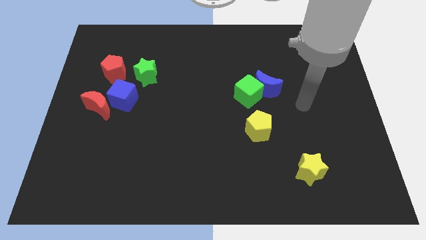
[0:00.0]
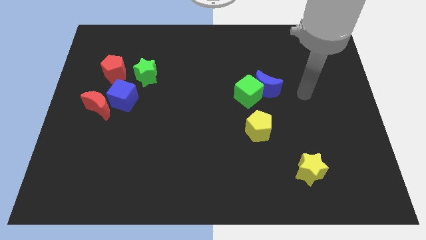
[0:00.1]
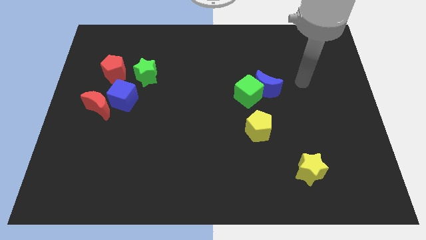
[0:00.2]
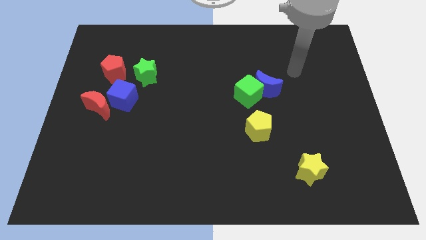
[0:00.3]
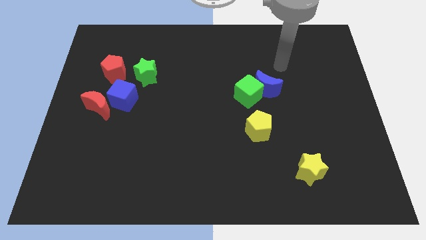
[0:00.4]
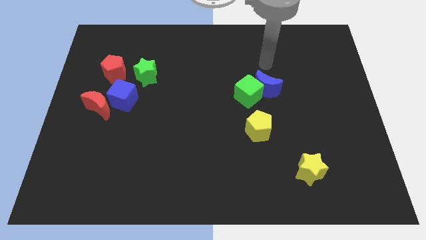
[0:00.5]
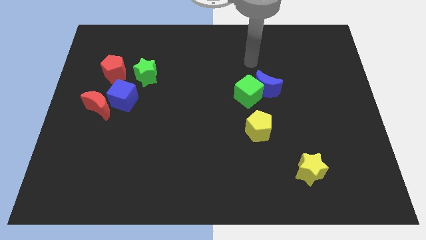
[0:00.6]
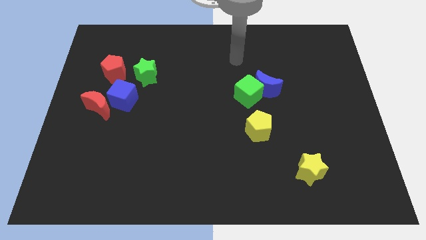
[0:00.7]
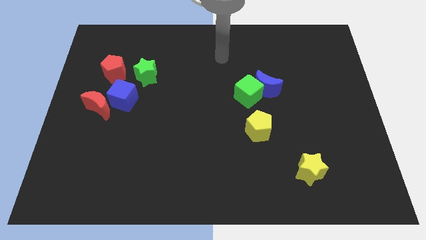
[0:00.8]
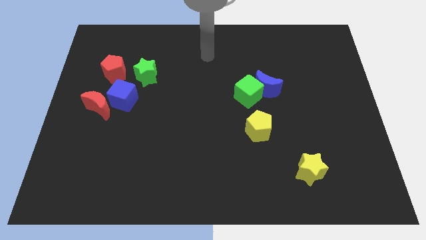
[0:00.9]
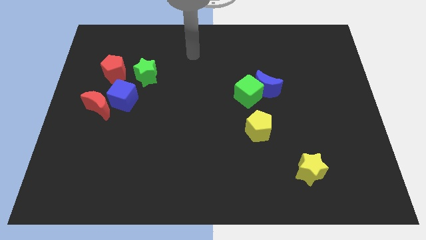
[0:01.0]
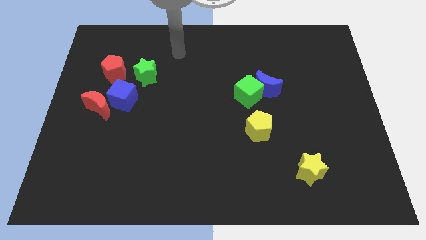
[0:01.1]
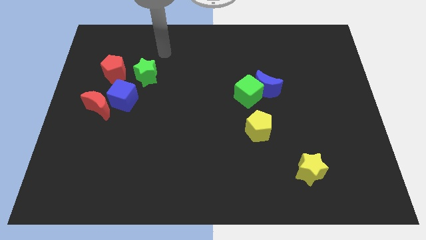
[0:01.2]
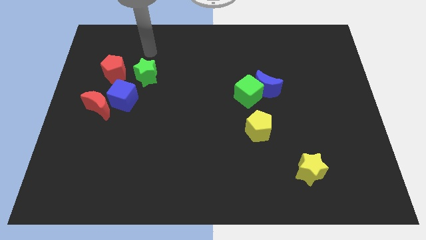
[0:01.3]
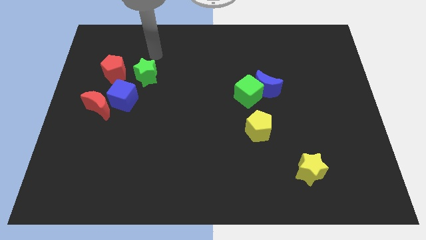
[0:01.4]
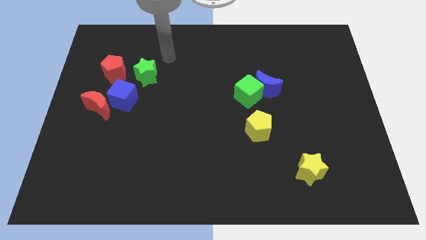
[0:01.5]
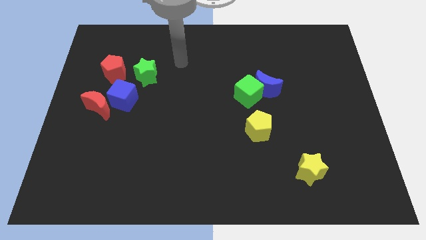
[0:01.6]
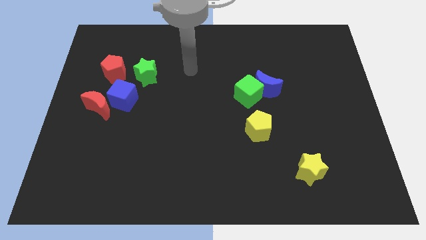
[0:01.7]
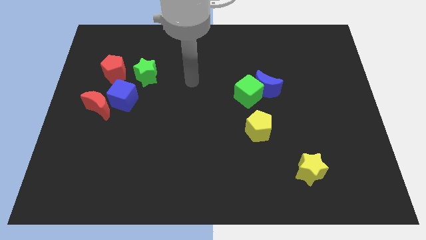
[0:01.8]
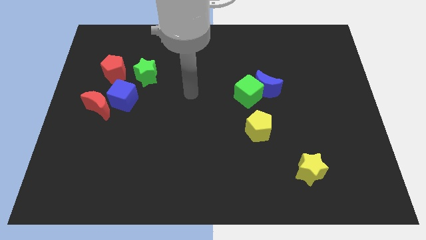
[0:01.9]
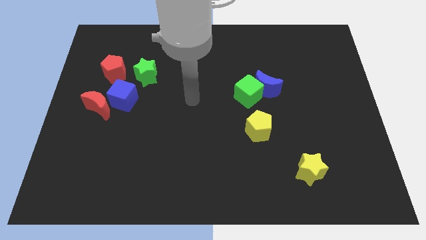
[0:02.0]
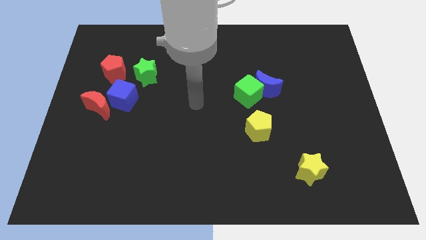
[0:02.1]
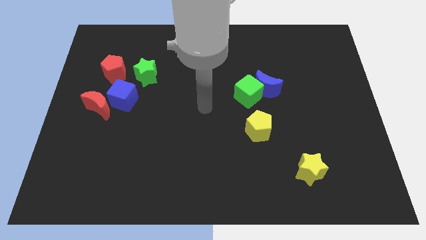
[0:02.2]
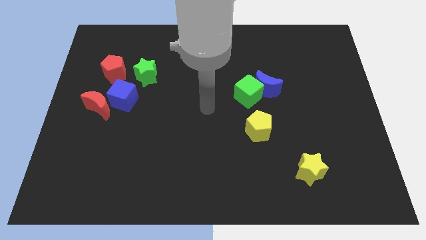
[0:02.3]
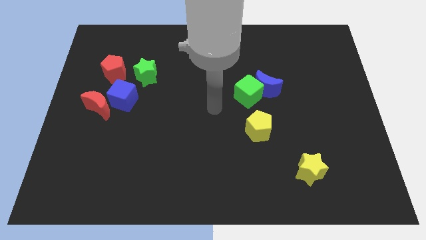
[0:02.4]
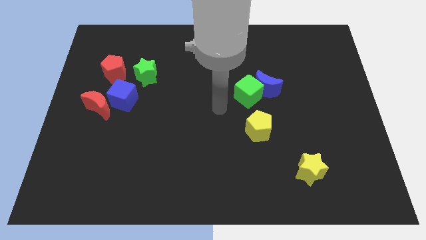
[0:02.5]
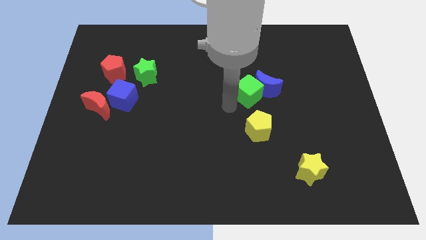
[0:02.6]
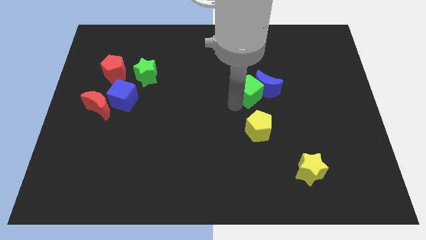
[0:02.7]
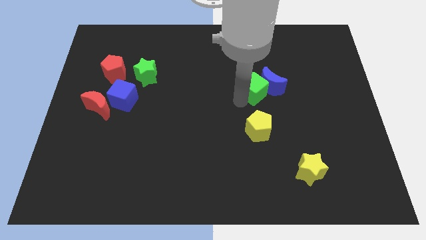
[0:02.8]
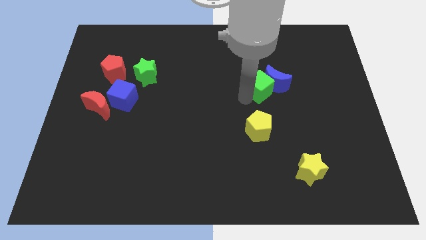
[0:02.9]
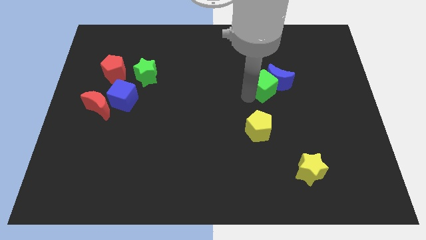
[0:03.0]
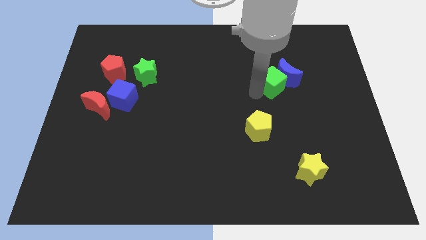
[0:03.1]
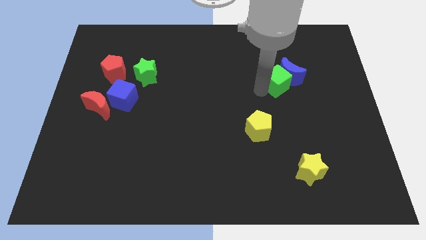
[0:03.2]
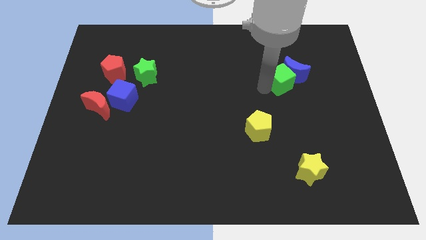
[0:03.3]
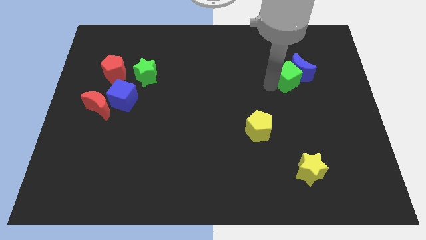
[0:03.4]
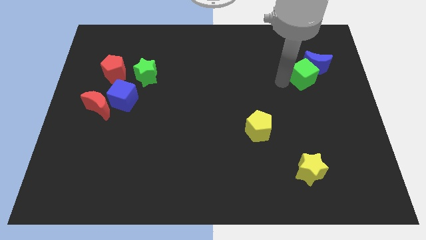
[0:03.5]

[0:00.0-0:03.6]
push the green cube and the blue moon towards top right

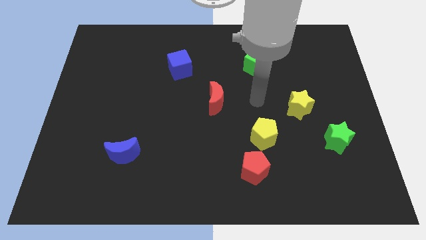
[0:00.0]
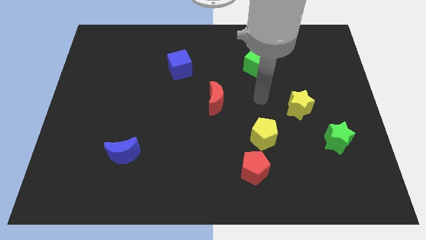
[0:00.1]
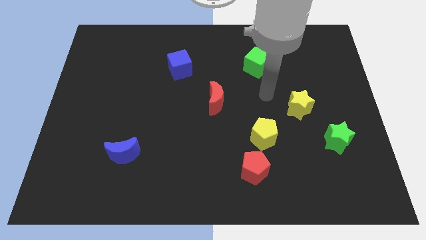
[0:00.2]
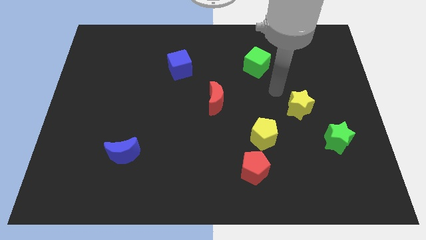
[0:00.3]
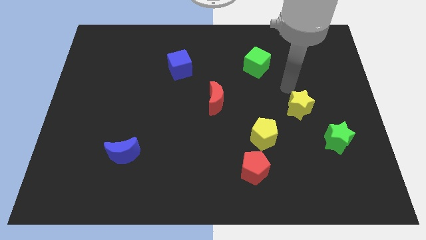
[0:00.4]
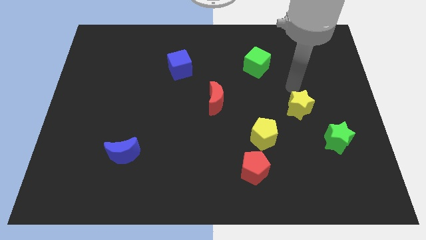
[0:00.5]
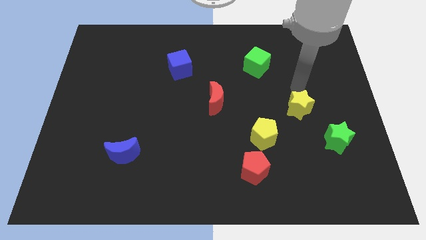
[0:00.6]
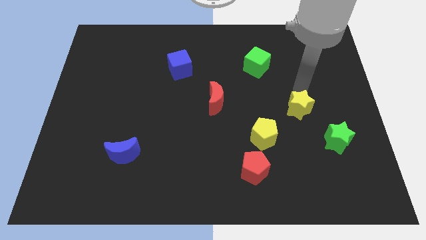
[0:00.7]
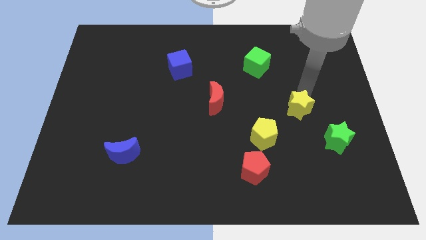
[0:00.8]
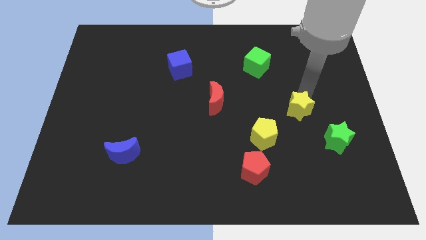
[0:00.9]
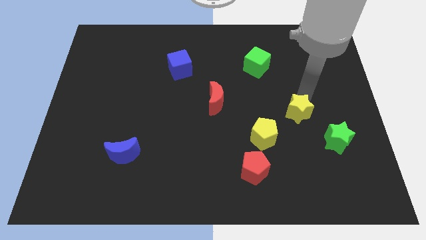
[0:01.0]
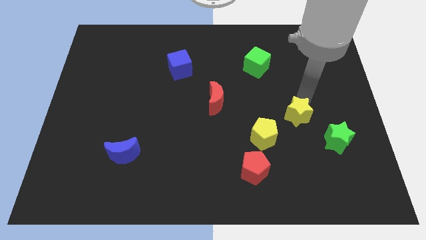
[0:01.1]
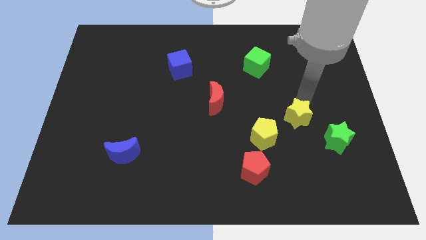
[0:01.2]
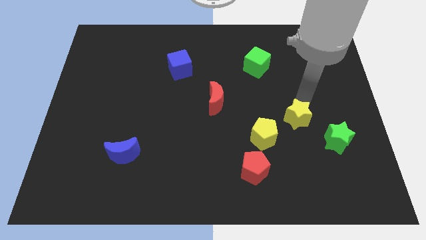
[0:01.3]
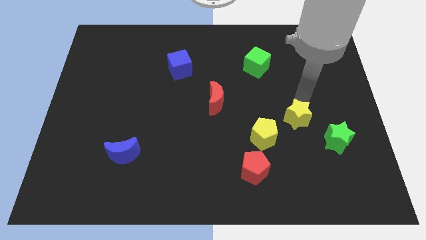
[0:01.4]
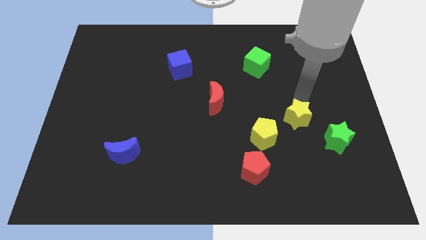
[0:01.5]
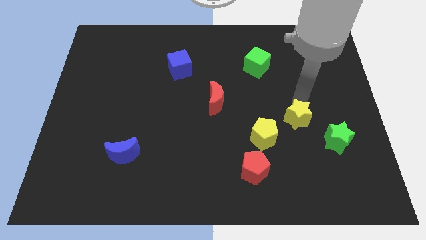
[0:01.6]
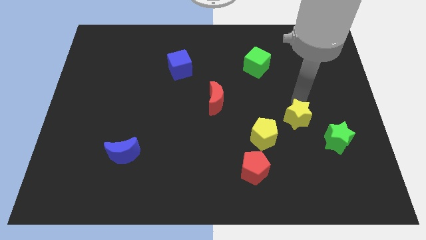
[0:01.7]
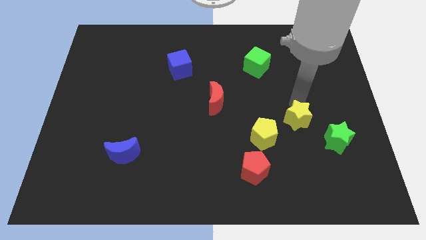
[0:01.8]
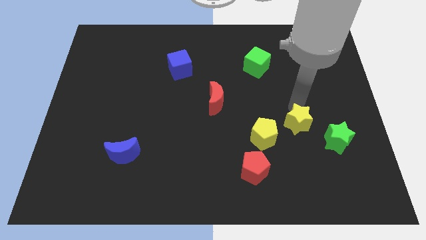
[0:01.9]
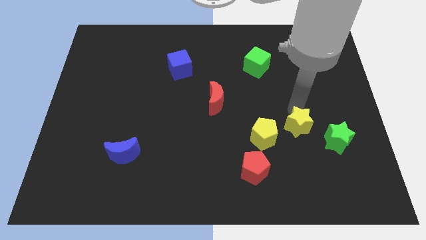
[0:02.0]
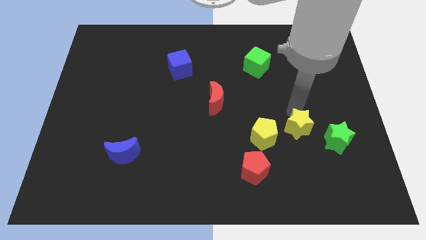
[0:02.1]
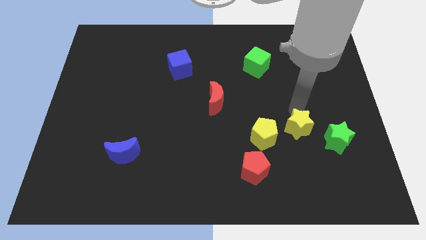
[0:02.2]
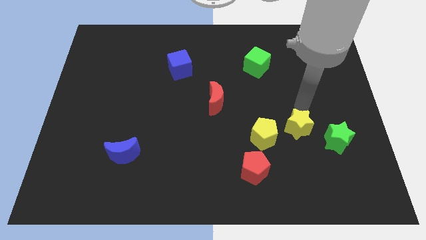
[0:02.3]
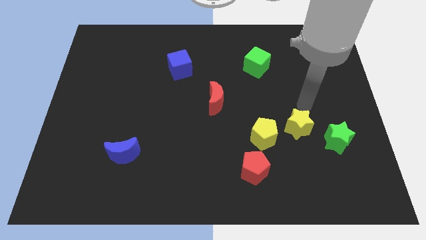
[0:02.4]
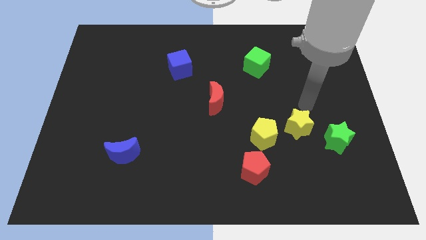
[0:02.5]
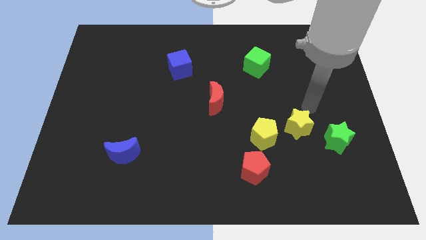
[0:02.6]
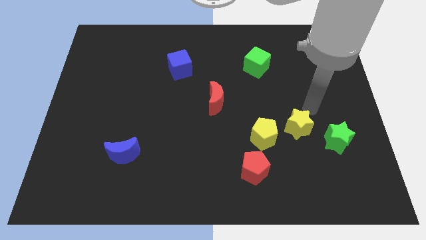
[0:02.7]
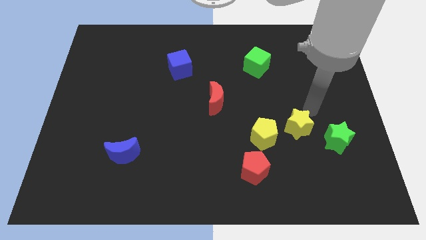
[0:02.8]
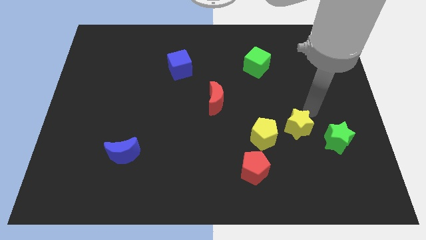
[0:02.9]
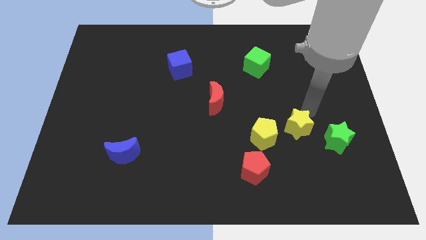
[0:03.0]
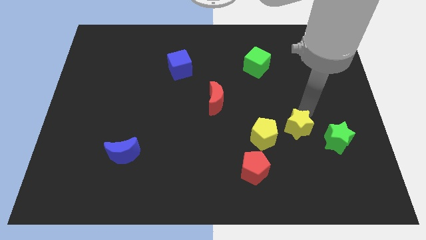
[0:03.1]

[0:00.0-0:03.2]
move yellow star towards the yellow pentagon

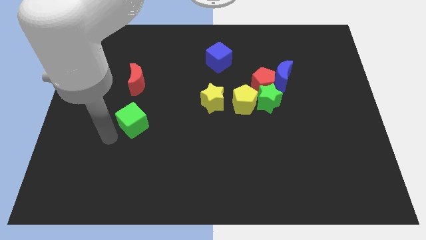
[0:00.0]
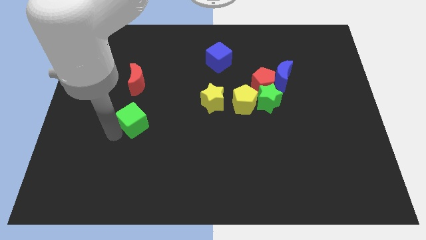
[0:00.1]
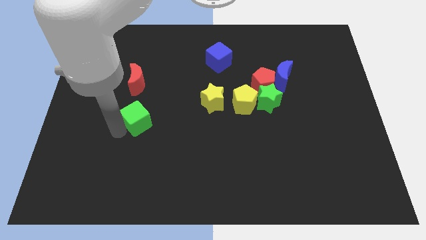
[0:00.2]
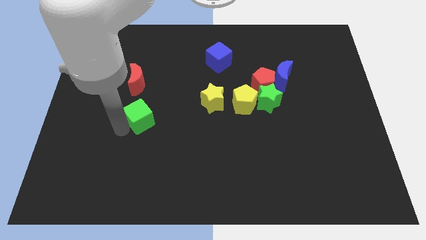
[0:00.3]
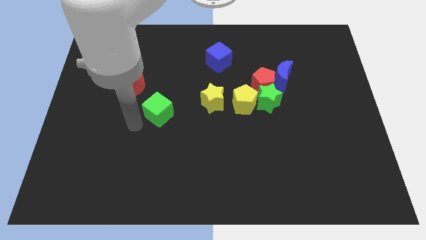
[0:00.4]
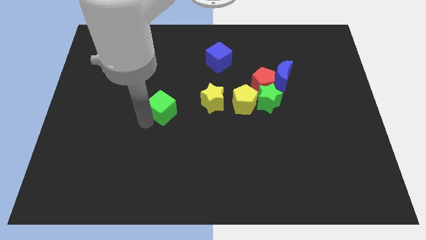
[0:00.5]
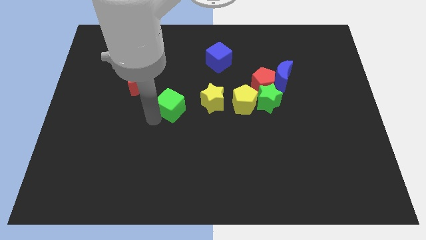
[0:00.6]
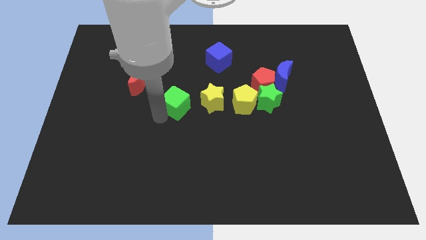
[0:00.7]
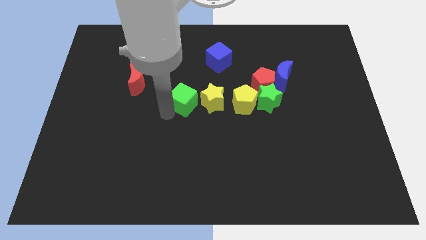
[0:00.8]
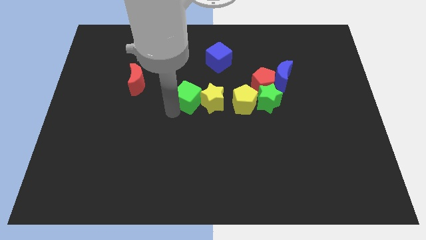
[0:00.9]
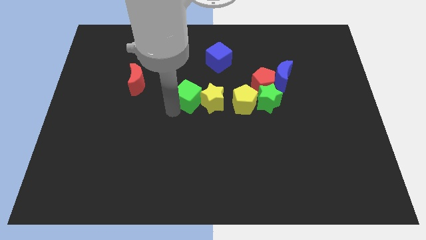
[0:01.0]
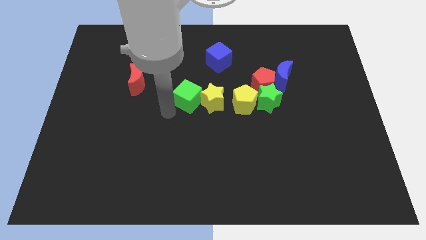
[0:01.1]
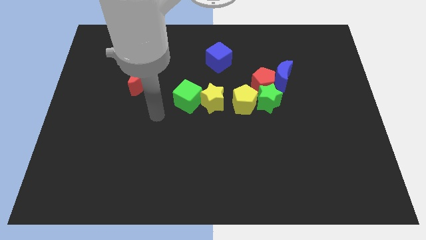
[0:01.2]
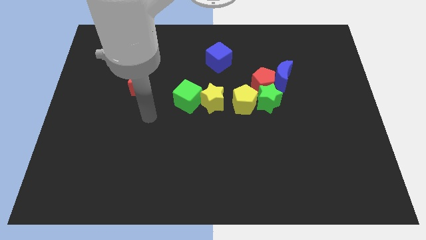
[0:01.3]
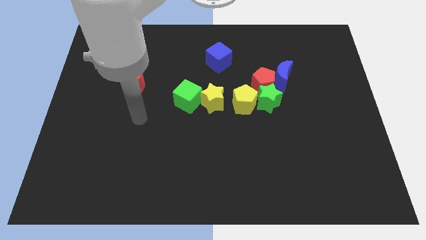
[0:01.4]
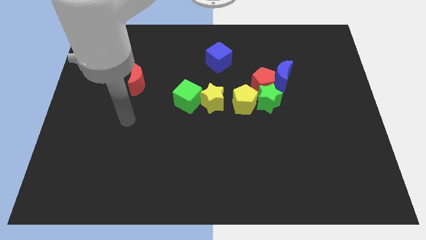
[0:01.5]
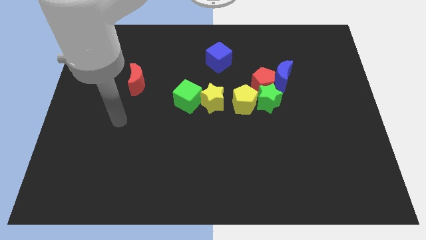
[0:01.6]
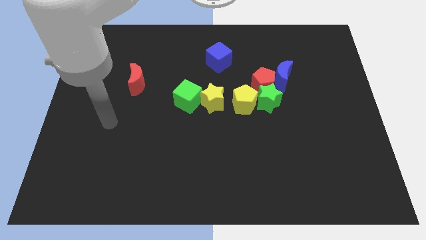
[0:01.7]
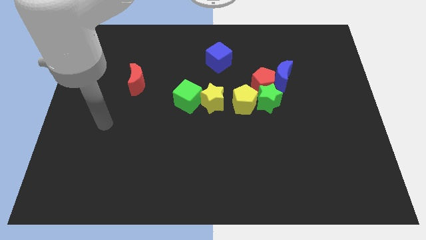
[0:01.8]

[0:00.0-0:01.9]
move the green cube left beside the yellow star
